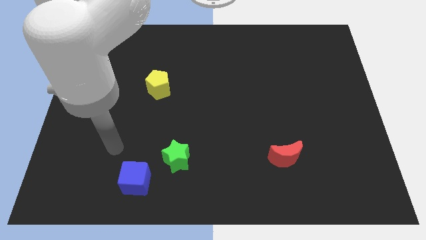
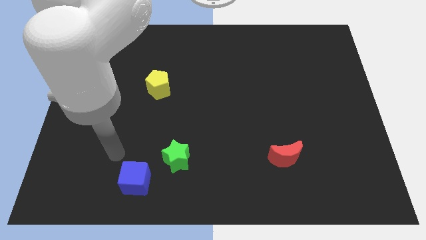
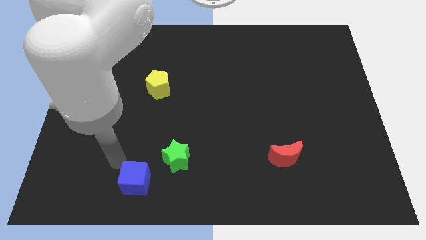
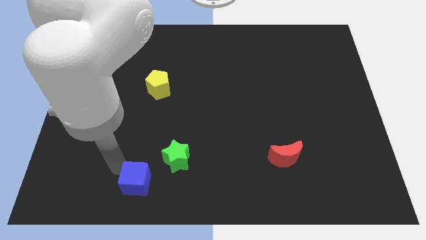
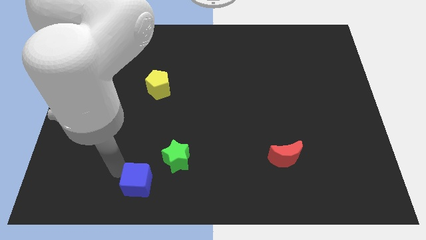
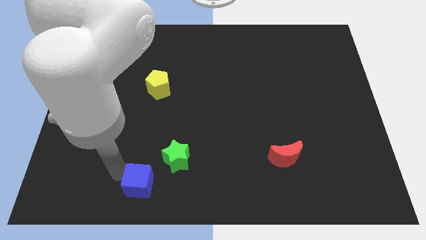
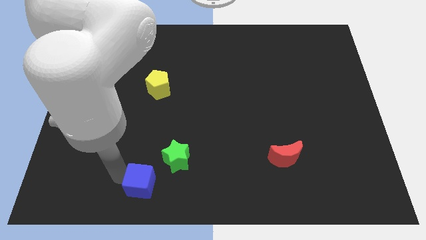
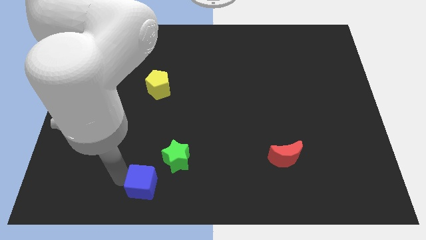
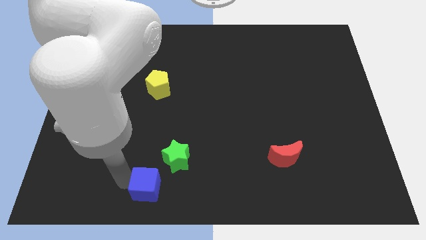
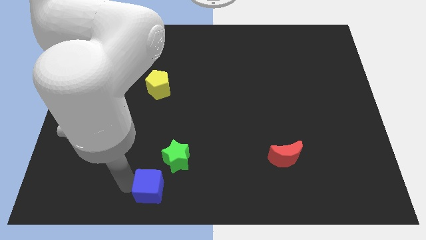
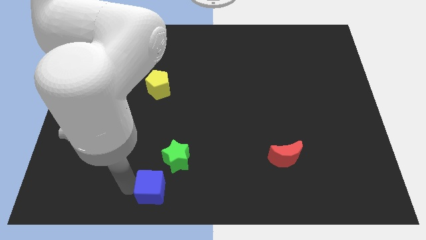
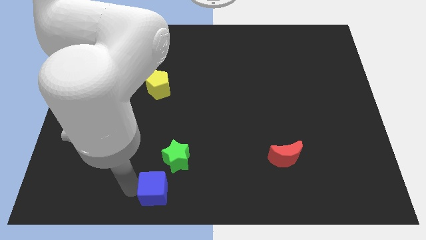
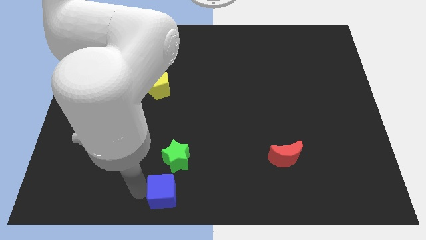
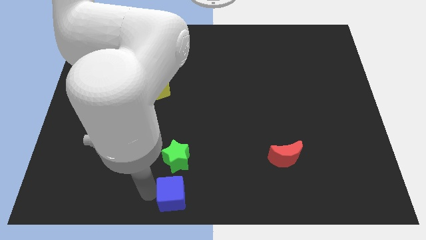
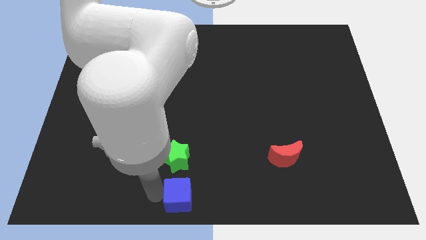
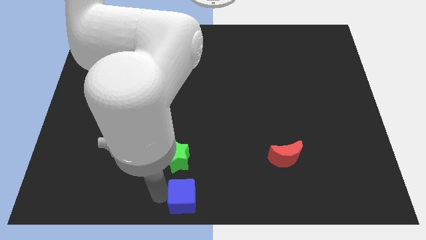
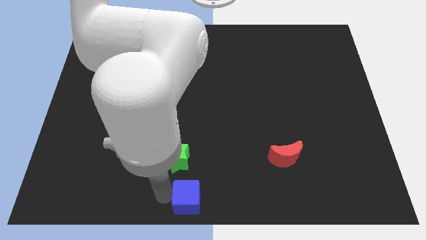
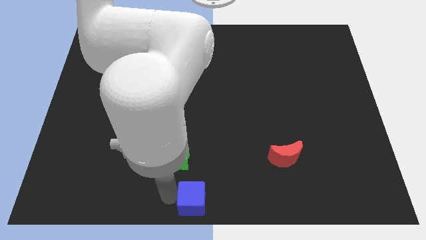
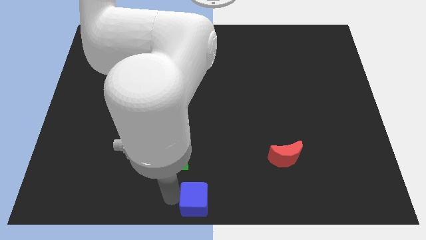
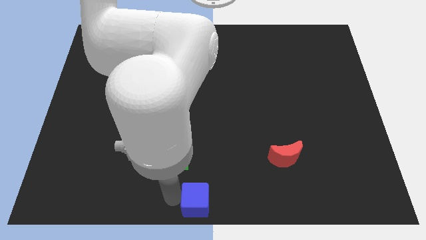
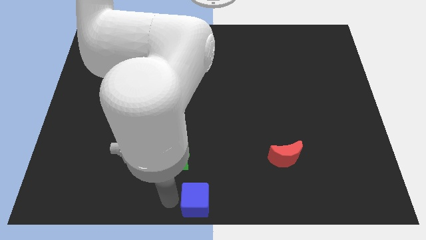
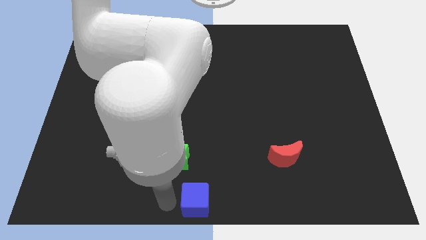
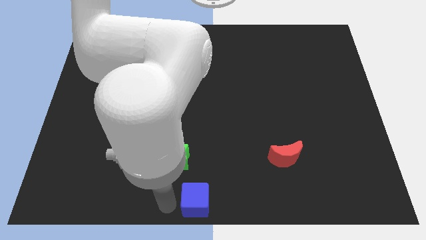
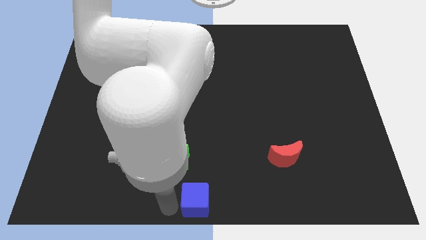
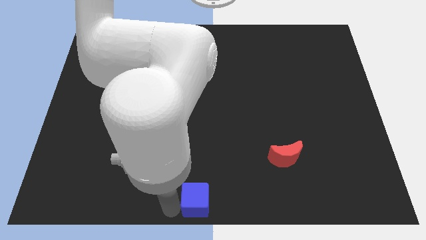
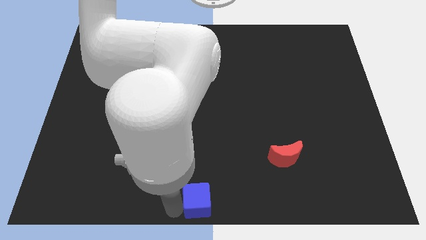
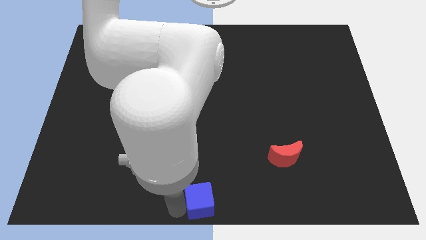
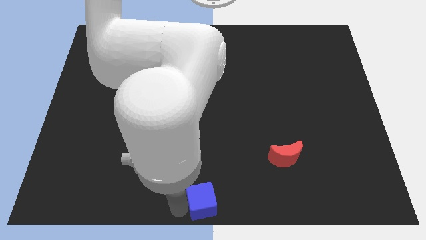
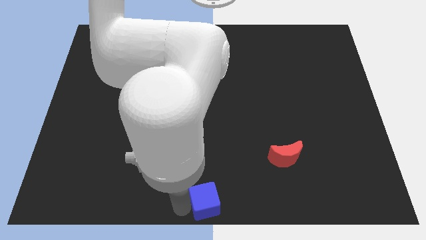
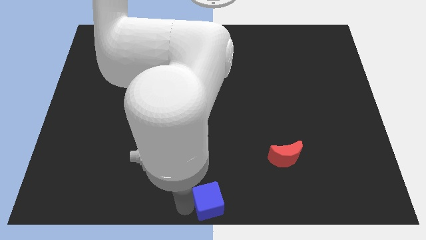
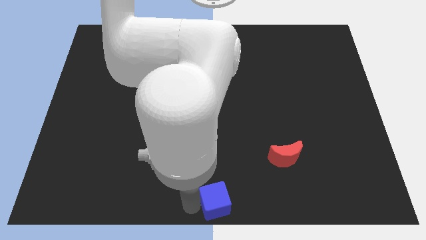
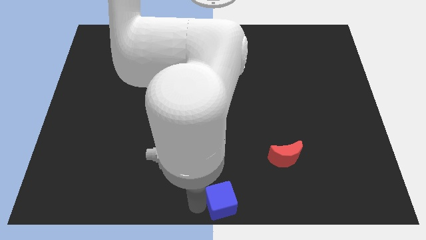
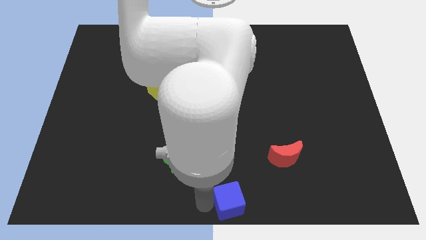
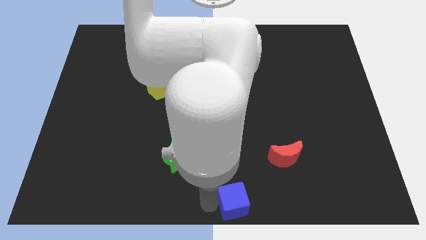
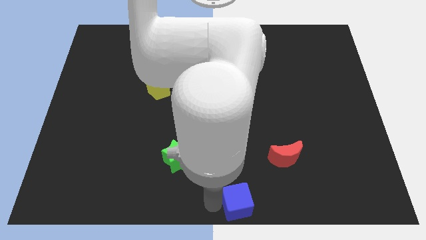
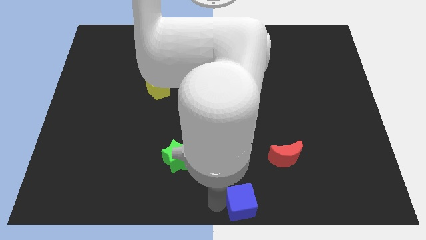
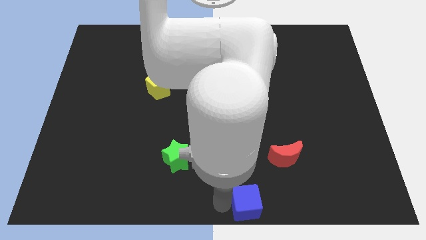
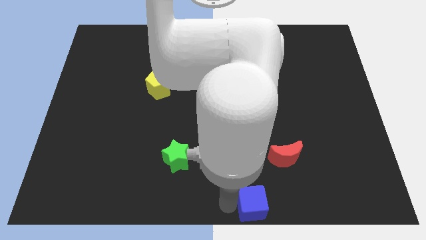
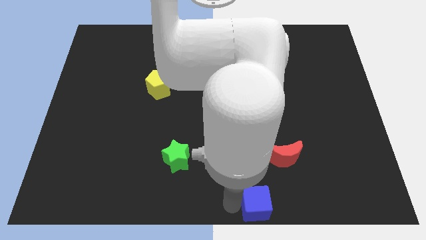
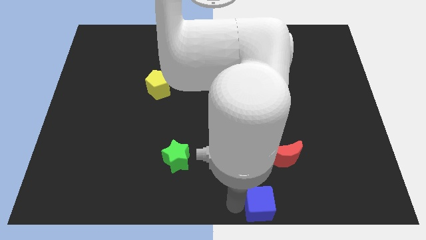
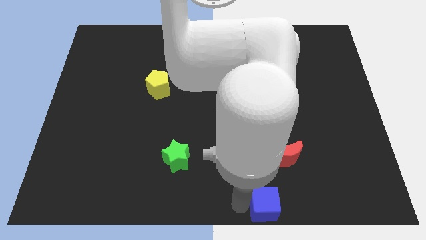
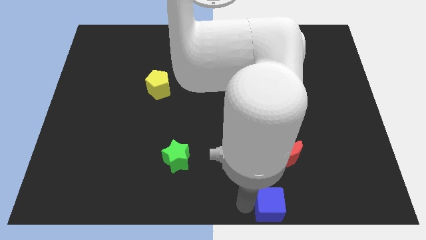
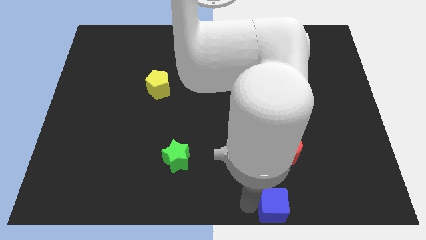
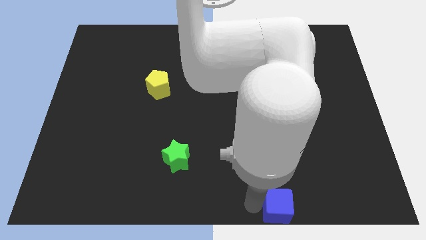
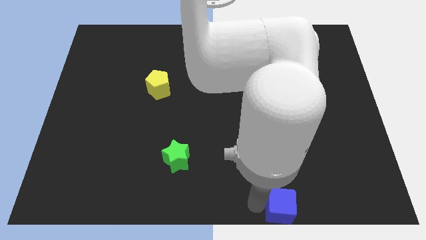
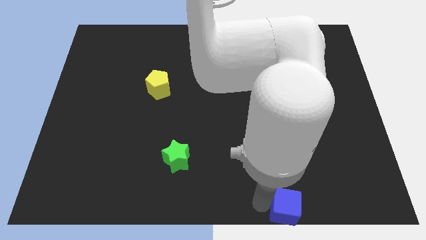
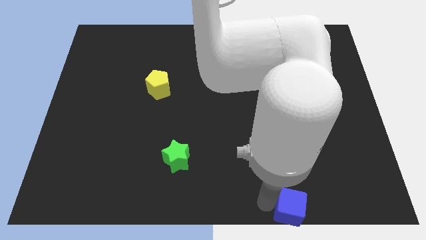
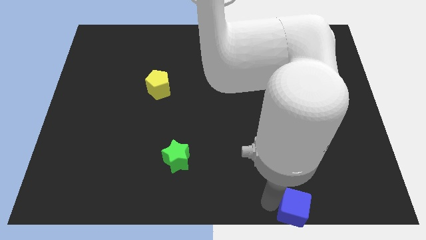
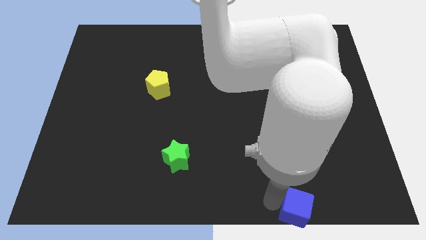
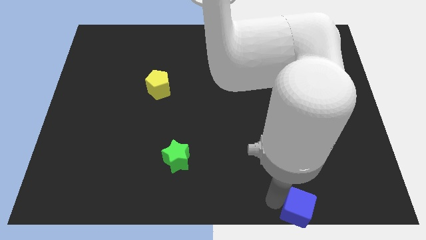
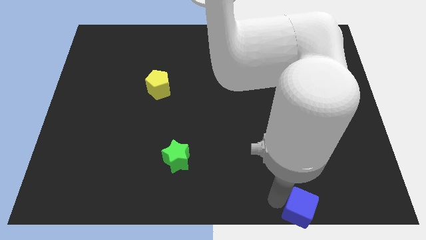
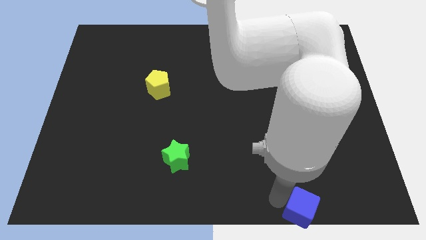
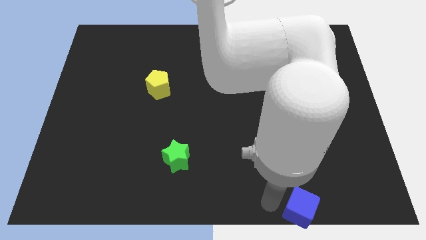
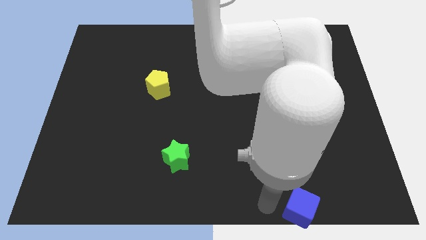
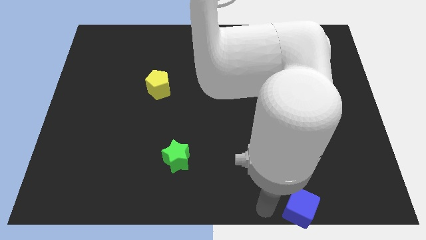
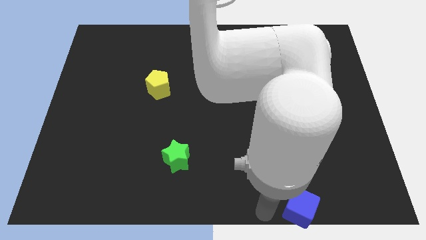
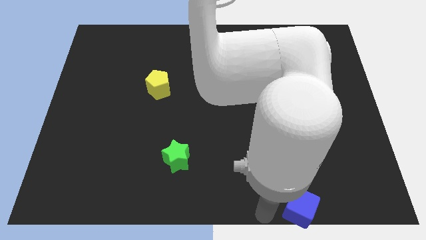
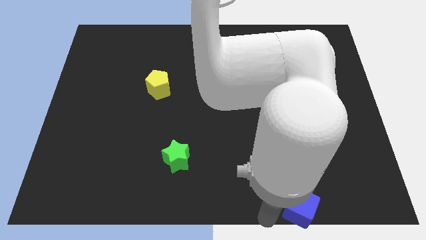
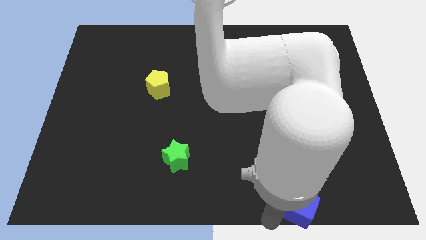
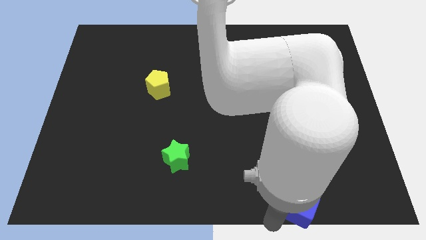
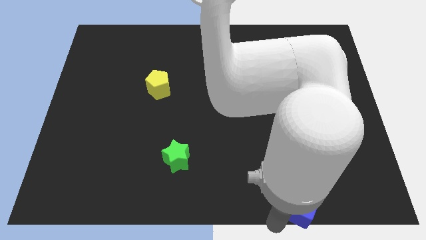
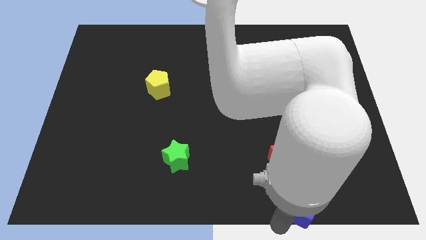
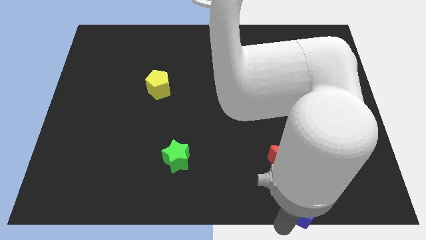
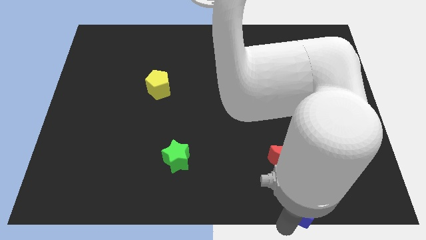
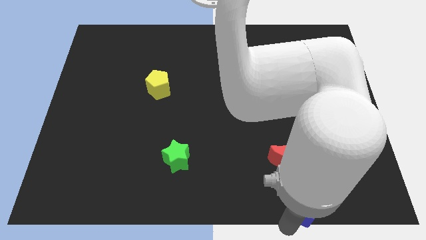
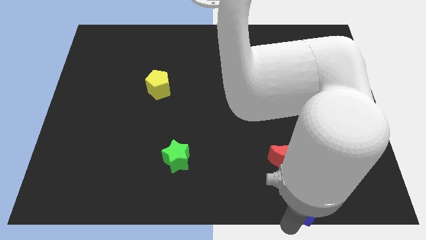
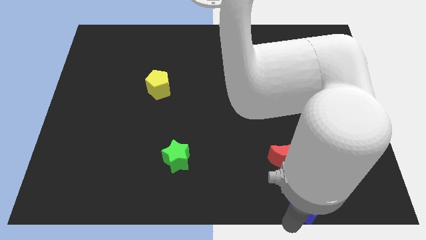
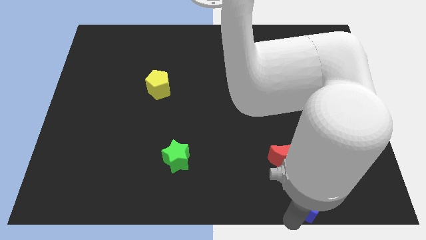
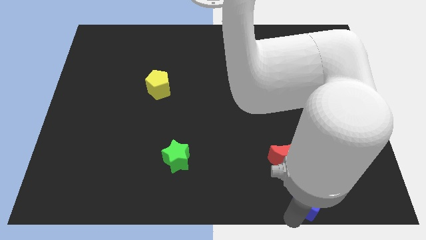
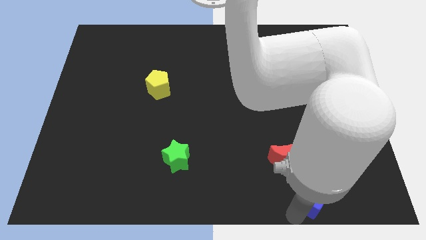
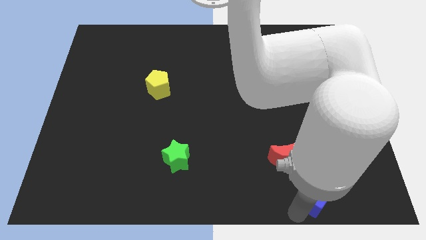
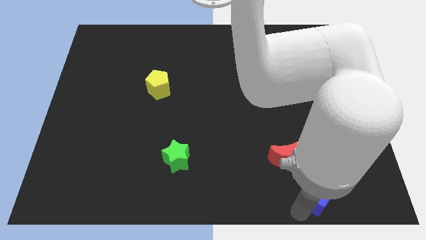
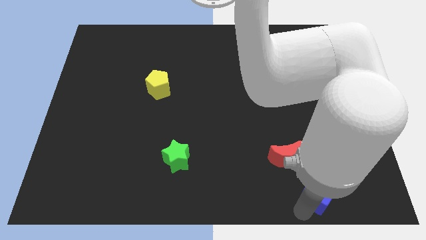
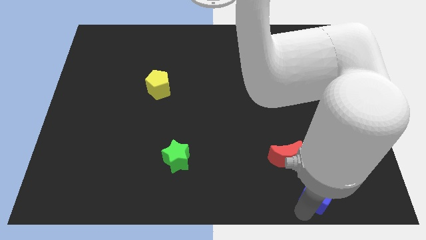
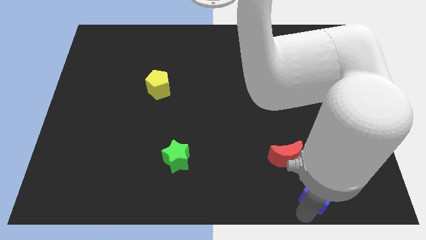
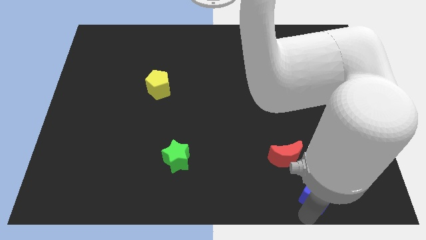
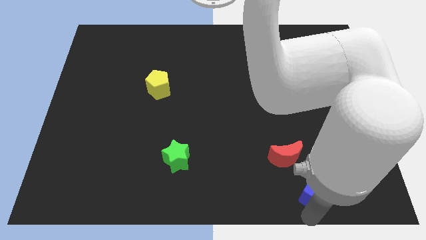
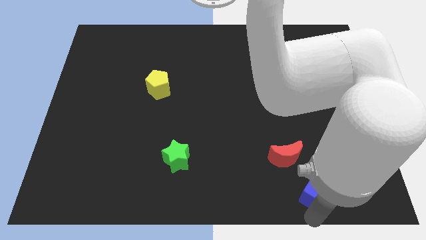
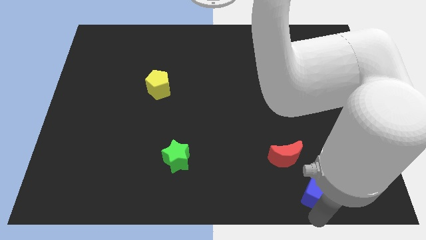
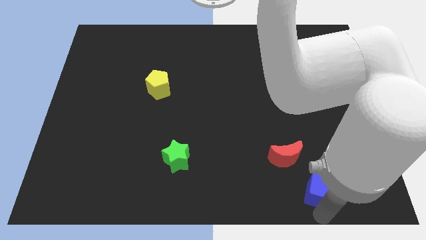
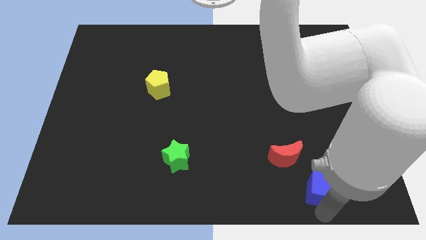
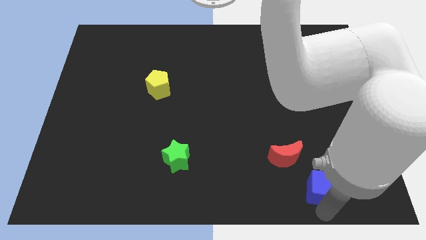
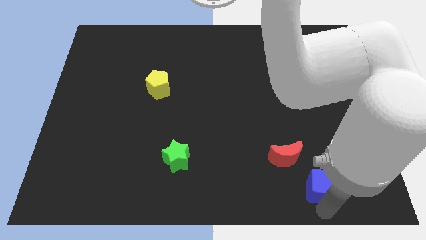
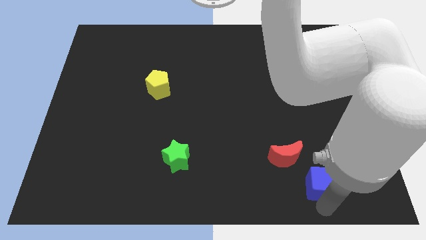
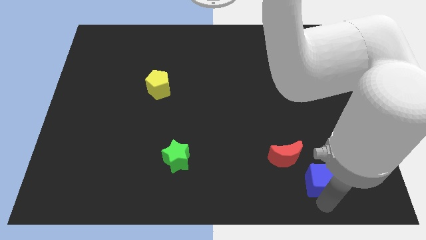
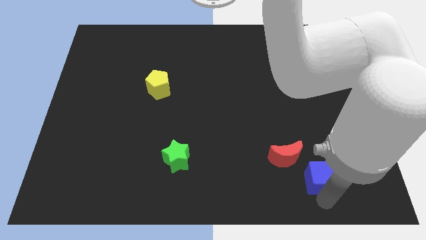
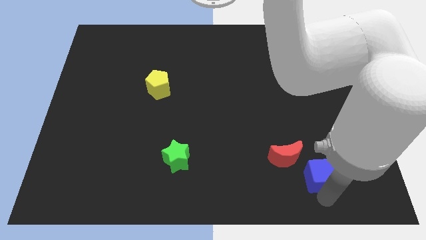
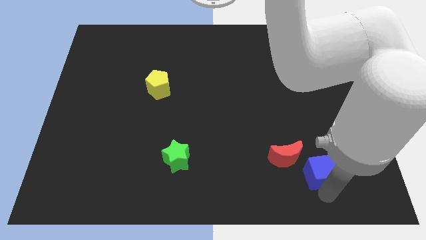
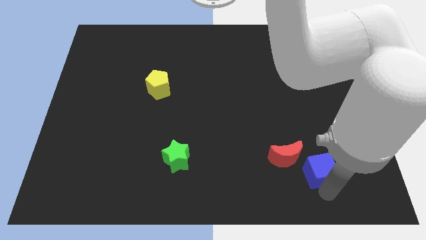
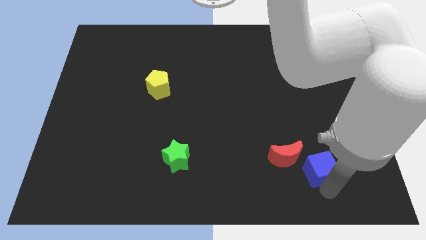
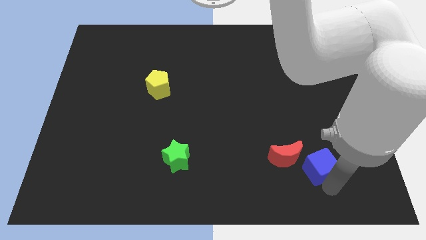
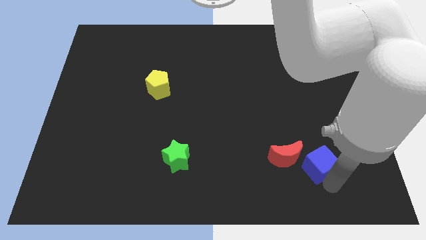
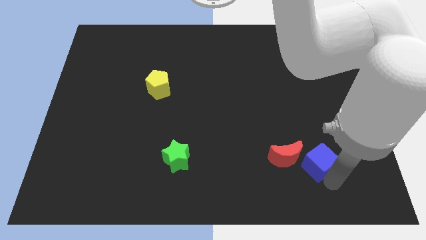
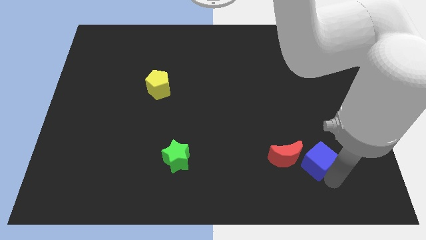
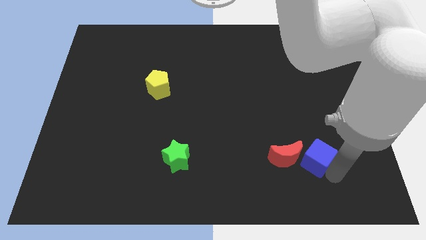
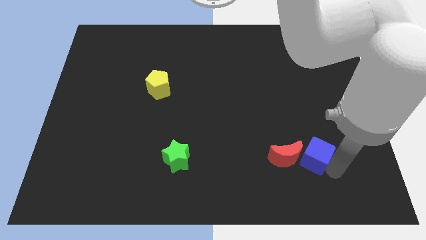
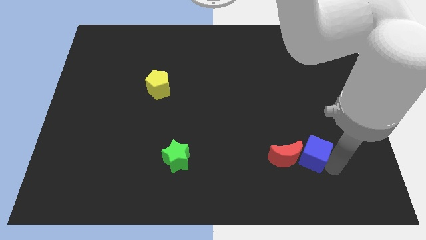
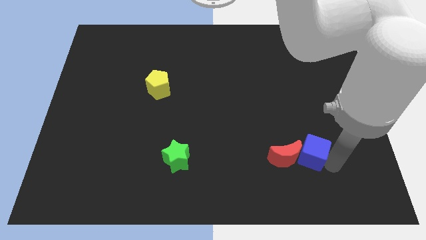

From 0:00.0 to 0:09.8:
move the cube next to the red block
